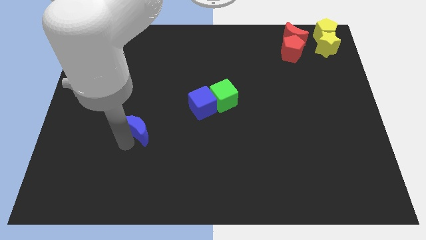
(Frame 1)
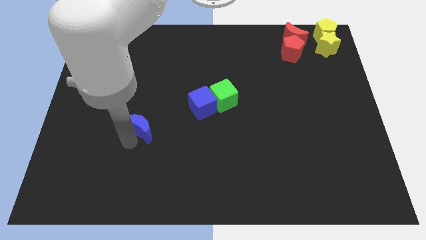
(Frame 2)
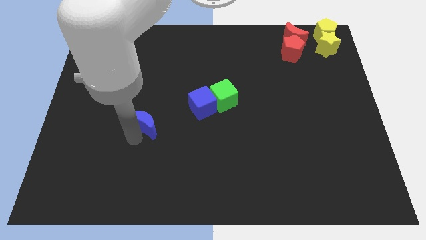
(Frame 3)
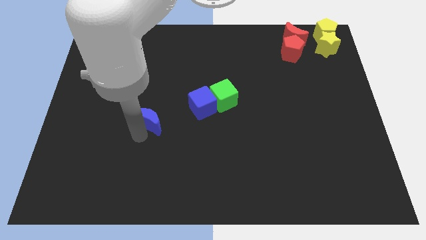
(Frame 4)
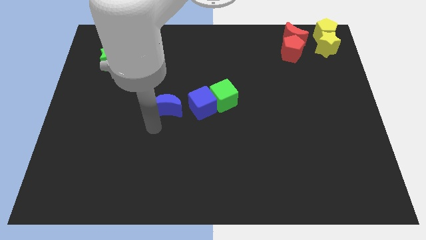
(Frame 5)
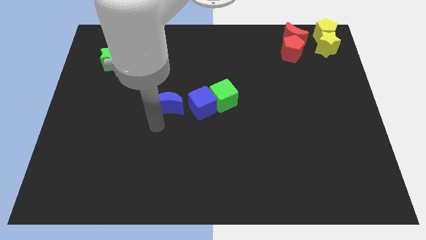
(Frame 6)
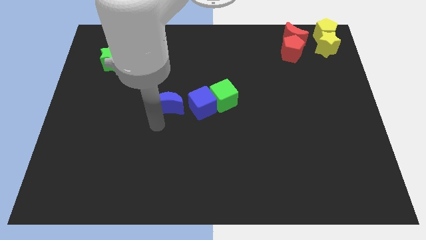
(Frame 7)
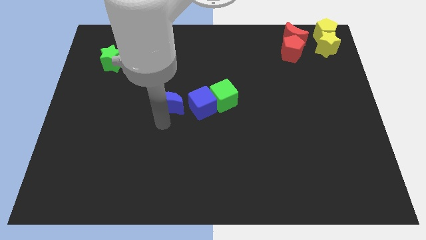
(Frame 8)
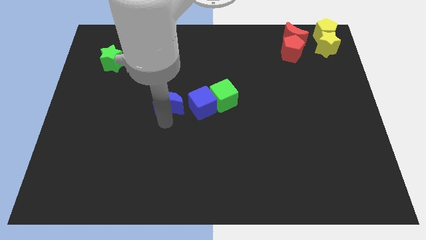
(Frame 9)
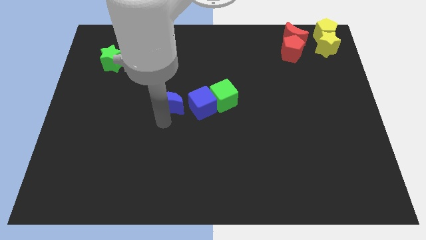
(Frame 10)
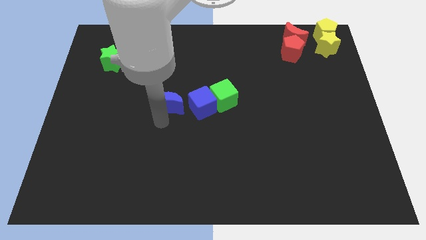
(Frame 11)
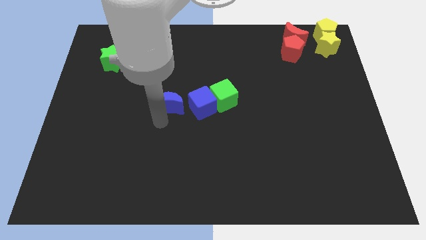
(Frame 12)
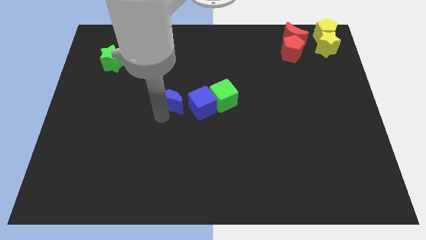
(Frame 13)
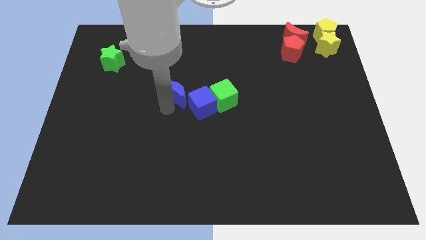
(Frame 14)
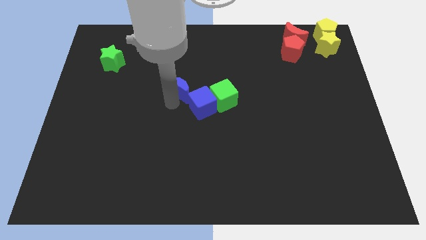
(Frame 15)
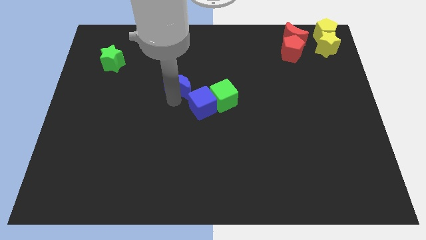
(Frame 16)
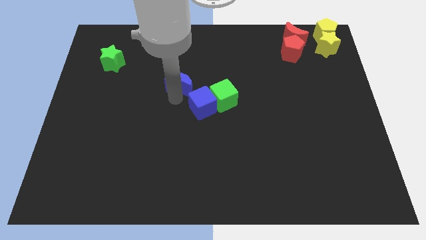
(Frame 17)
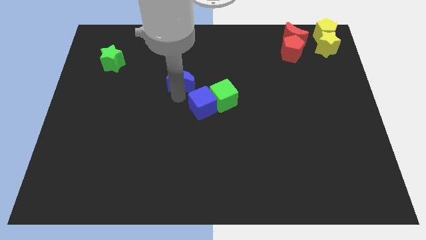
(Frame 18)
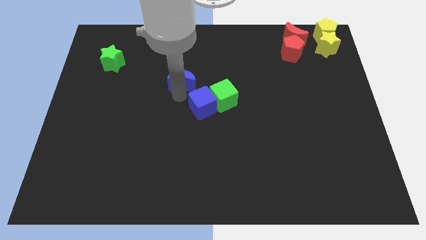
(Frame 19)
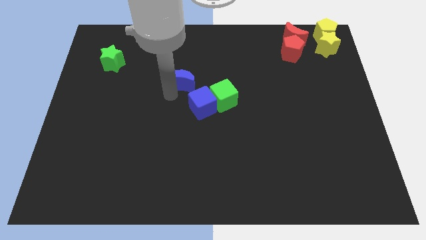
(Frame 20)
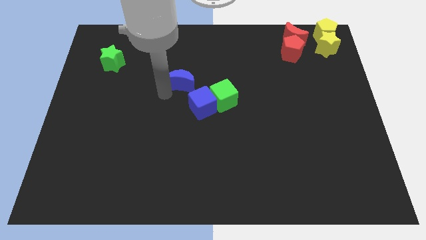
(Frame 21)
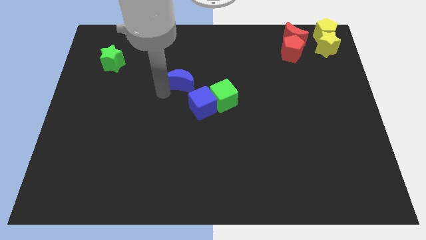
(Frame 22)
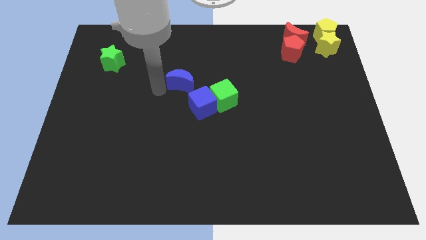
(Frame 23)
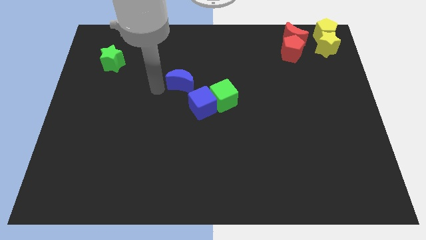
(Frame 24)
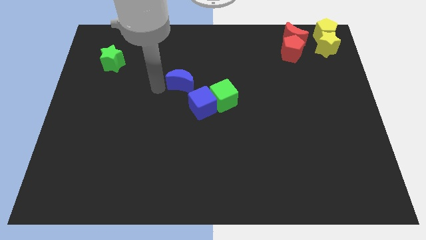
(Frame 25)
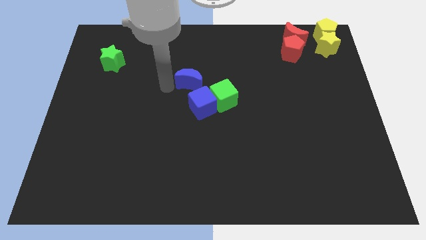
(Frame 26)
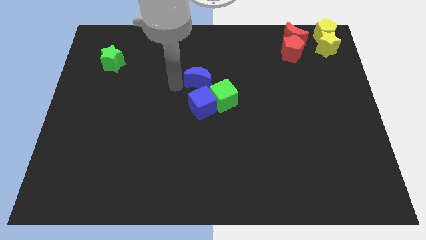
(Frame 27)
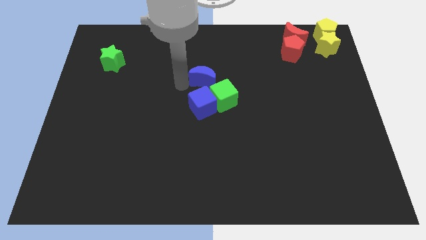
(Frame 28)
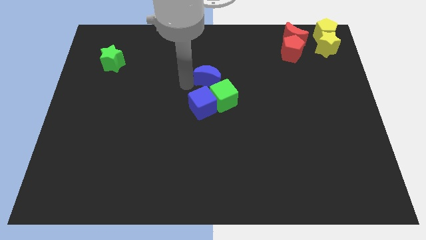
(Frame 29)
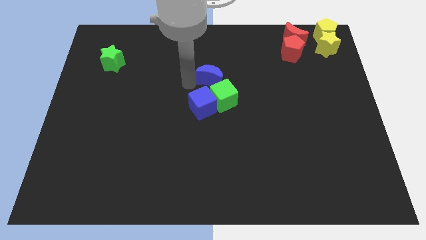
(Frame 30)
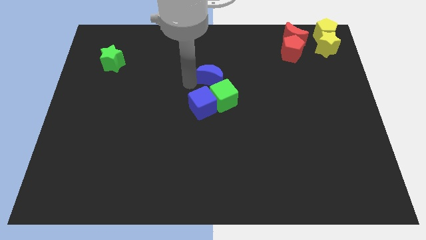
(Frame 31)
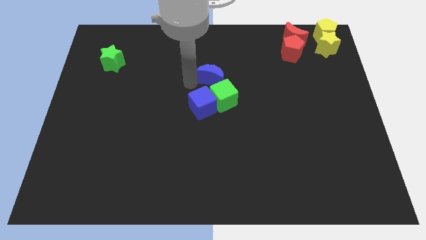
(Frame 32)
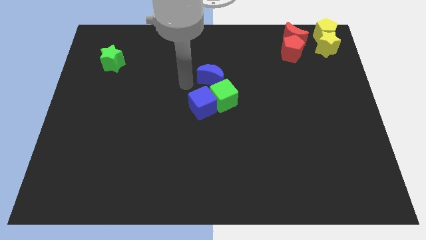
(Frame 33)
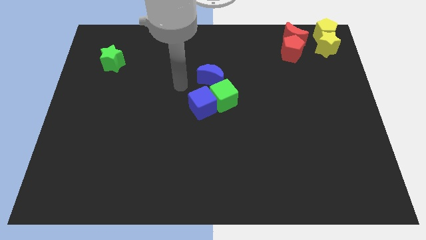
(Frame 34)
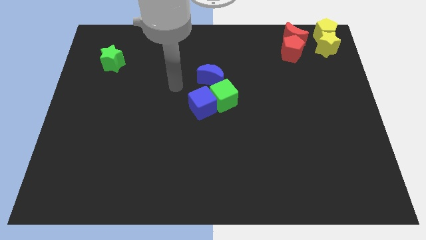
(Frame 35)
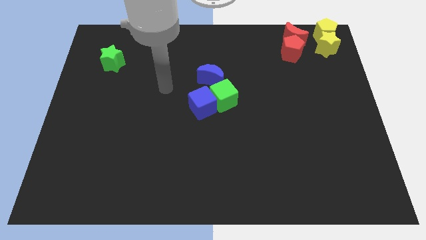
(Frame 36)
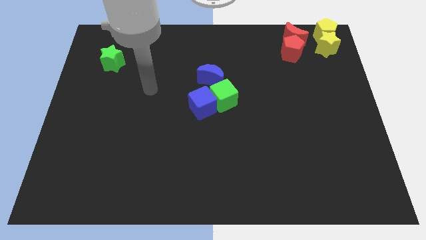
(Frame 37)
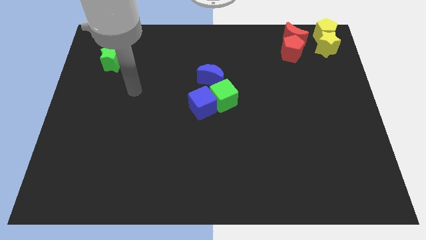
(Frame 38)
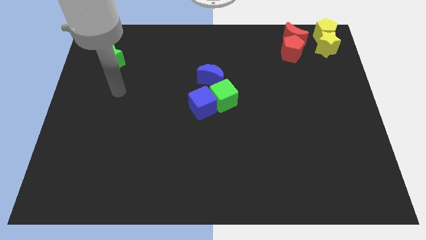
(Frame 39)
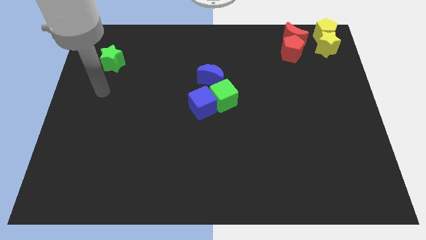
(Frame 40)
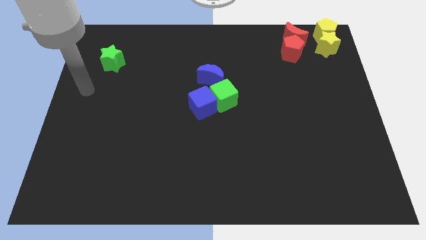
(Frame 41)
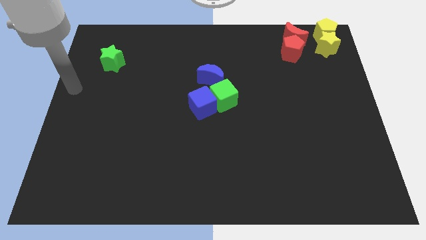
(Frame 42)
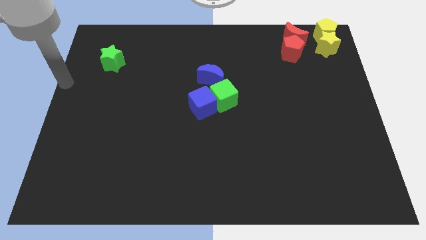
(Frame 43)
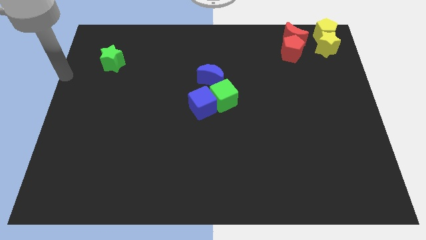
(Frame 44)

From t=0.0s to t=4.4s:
place blue moon above green cube

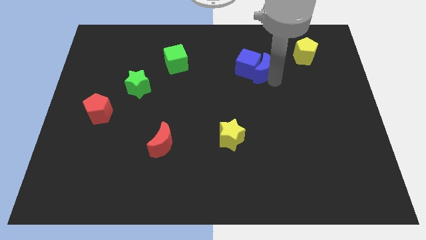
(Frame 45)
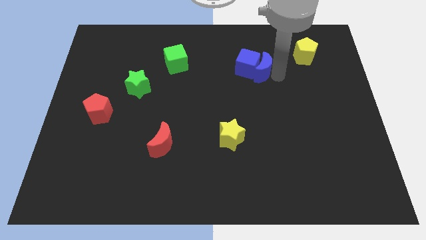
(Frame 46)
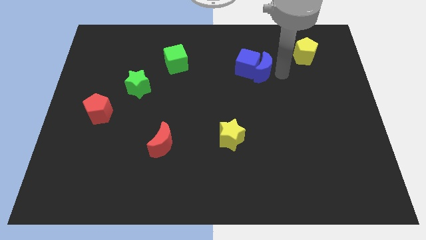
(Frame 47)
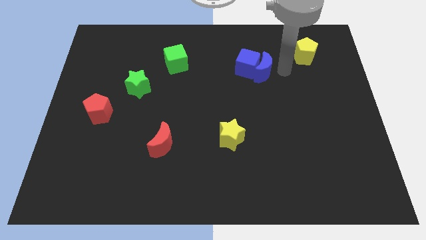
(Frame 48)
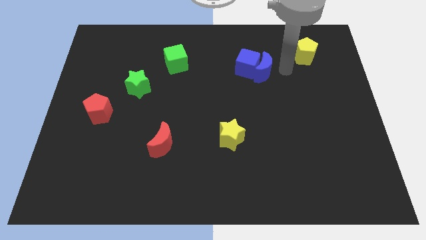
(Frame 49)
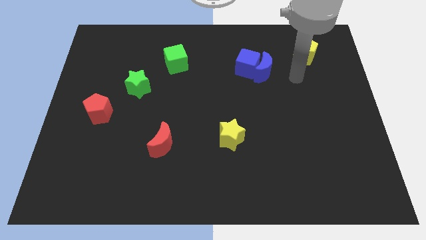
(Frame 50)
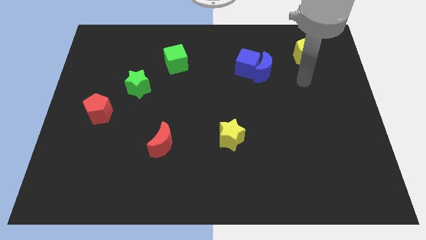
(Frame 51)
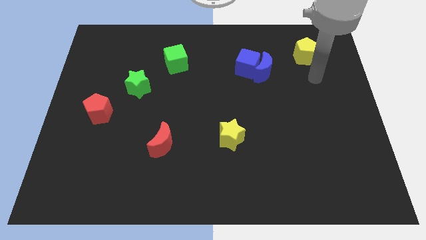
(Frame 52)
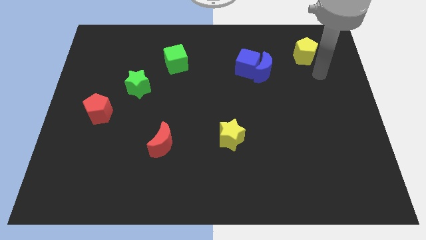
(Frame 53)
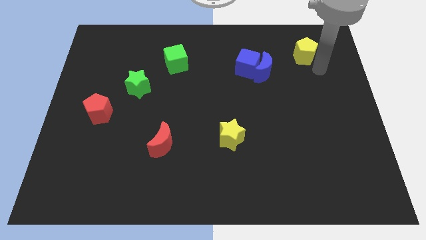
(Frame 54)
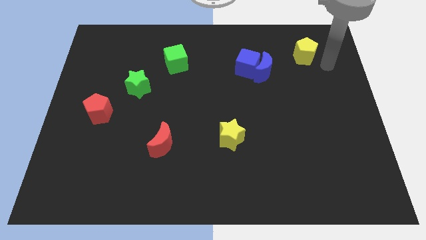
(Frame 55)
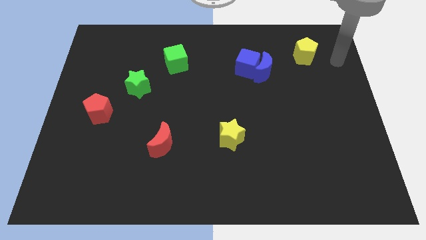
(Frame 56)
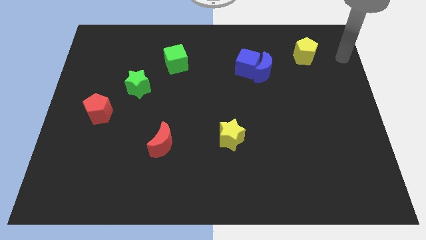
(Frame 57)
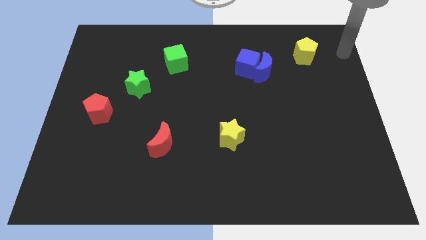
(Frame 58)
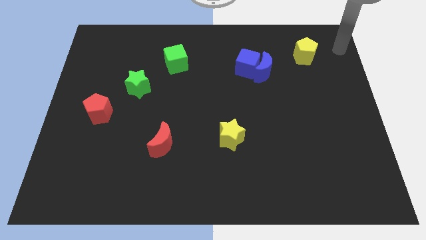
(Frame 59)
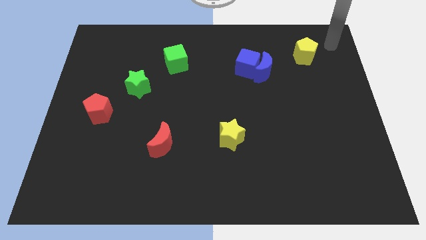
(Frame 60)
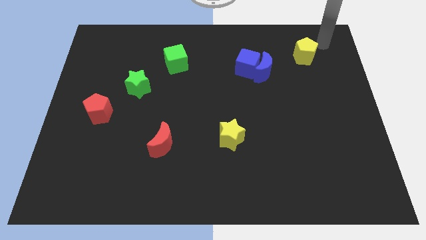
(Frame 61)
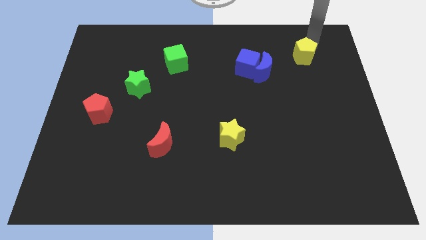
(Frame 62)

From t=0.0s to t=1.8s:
move the arm to the top of the yellow pentagon

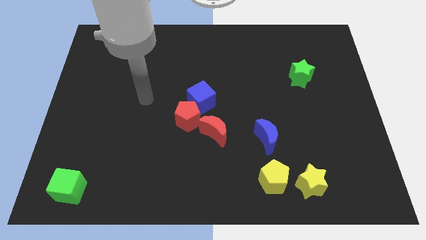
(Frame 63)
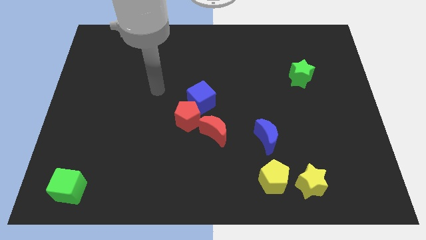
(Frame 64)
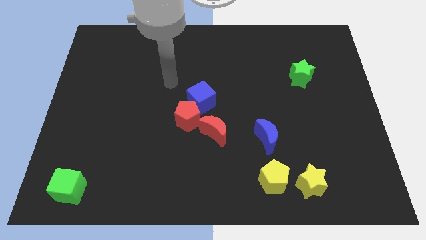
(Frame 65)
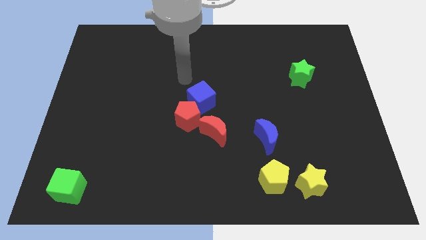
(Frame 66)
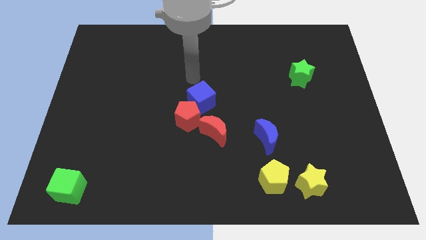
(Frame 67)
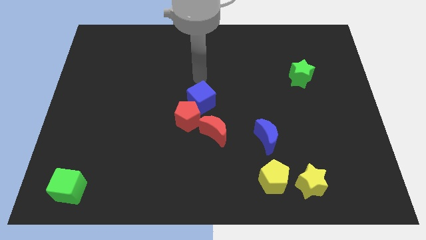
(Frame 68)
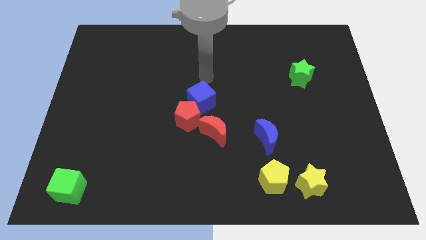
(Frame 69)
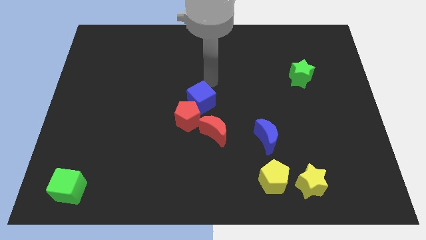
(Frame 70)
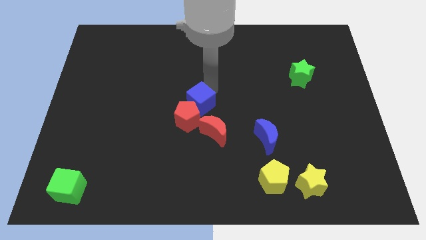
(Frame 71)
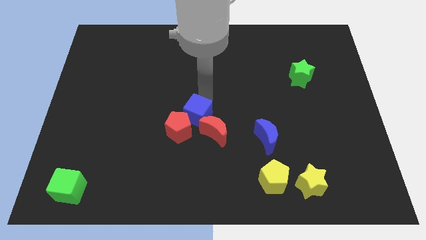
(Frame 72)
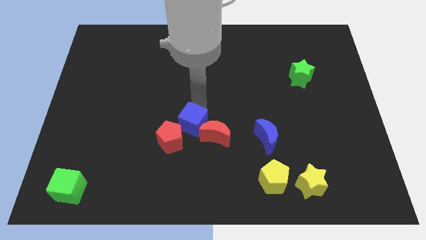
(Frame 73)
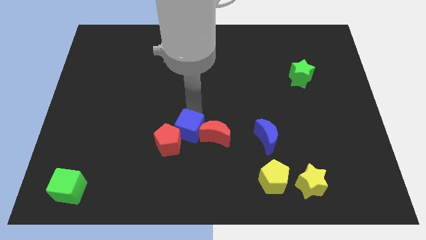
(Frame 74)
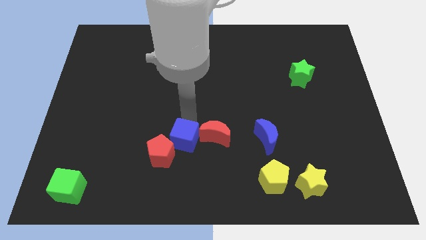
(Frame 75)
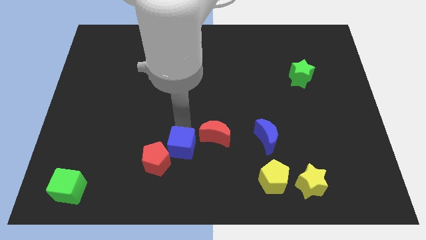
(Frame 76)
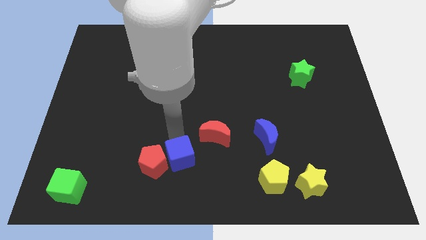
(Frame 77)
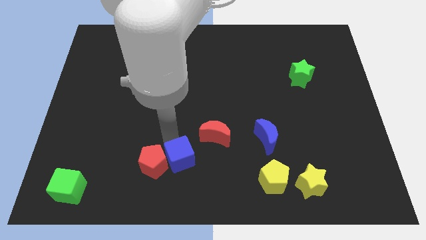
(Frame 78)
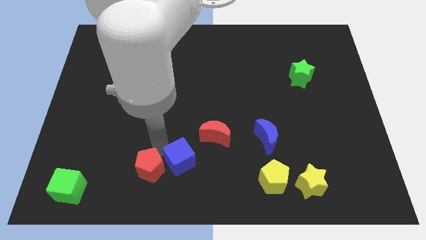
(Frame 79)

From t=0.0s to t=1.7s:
push the red pentagon with the blue cube

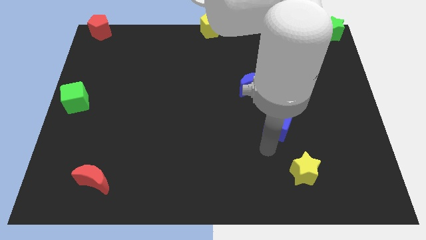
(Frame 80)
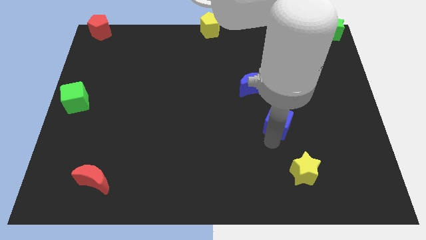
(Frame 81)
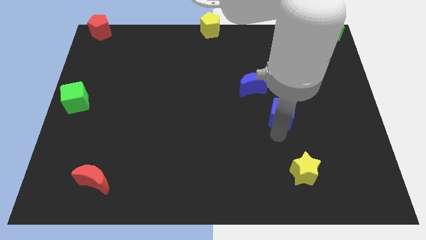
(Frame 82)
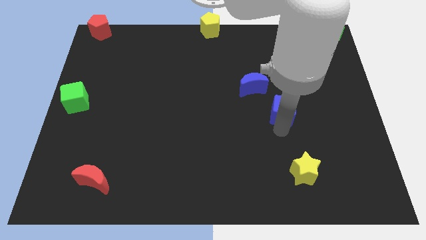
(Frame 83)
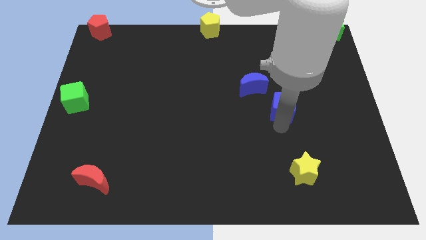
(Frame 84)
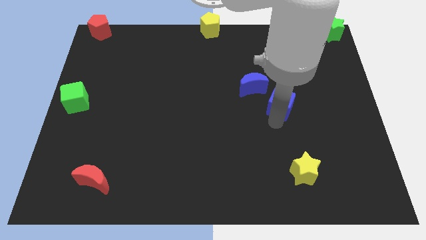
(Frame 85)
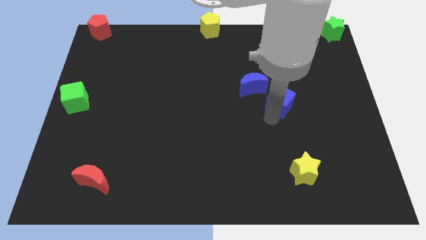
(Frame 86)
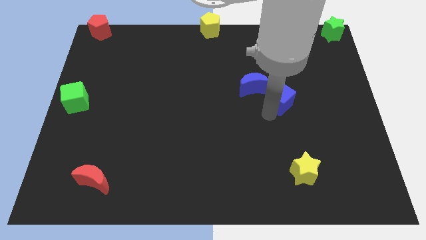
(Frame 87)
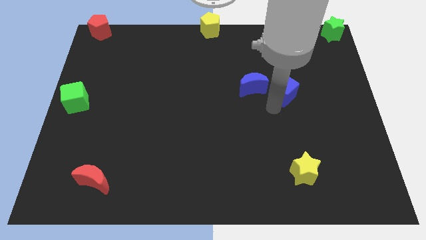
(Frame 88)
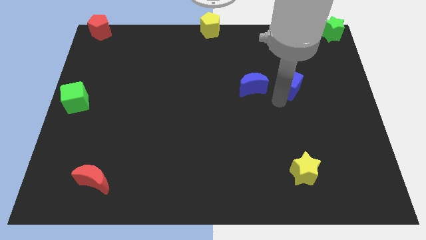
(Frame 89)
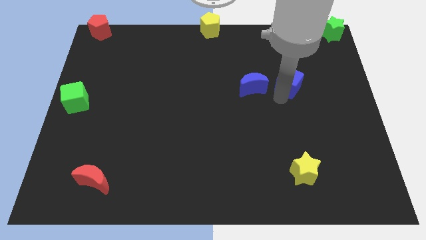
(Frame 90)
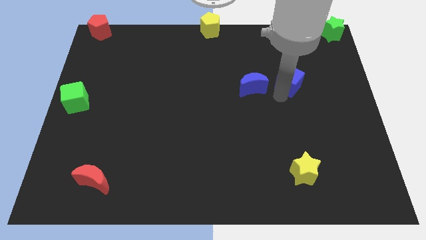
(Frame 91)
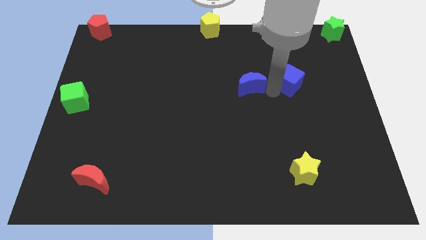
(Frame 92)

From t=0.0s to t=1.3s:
place the blue cube parallel to blue moon
